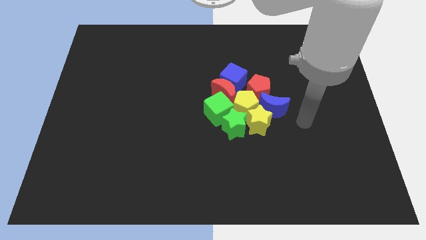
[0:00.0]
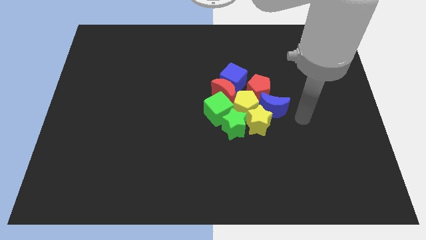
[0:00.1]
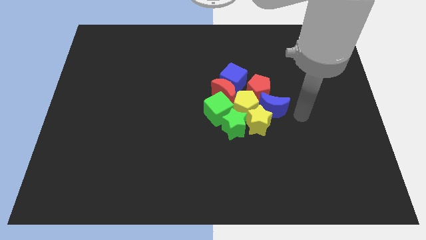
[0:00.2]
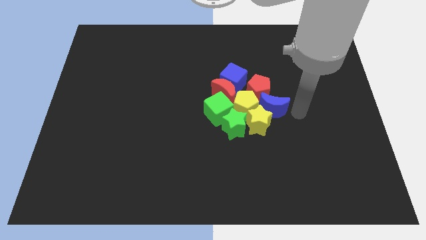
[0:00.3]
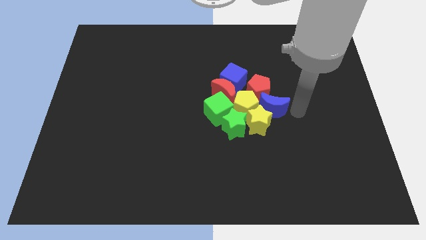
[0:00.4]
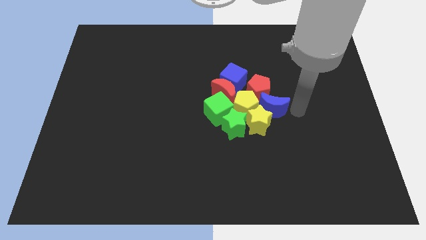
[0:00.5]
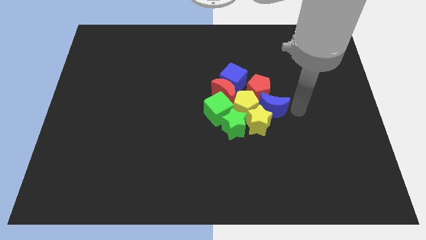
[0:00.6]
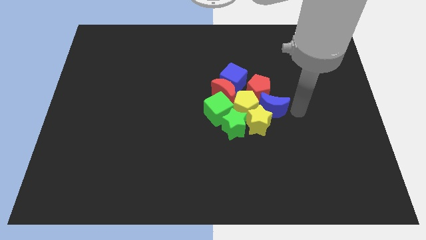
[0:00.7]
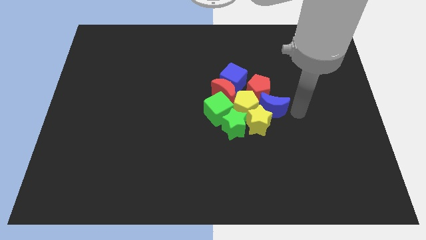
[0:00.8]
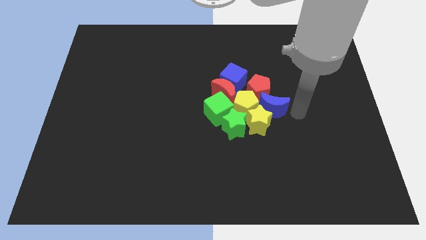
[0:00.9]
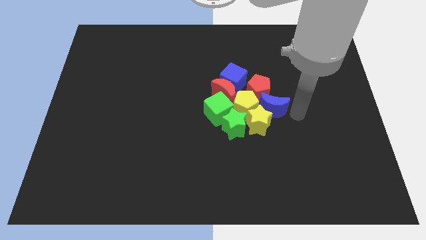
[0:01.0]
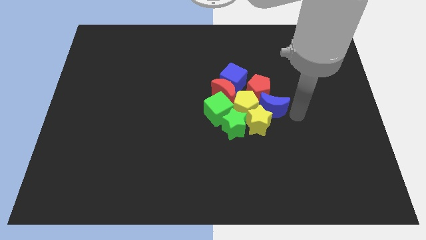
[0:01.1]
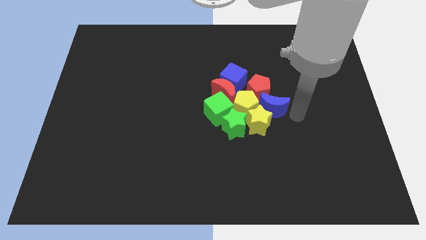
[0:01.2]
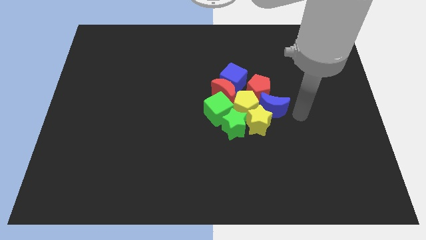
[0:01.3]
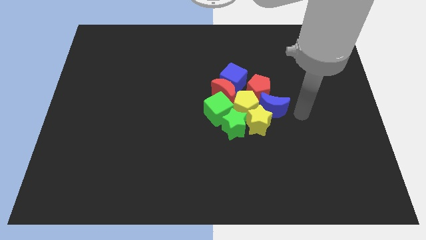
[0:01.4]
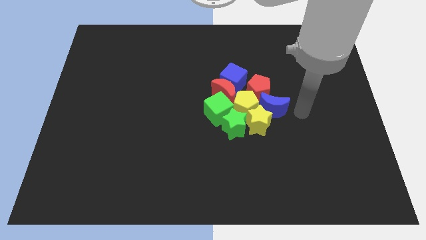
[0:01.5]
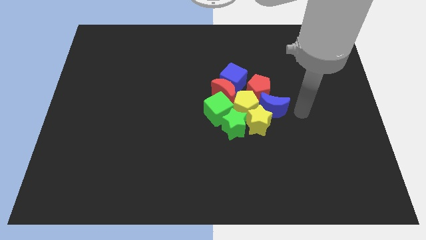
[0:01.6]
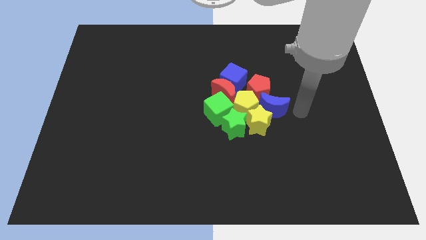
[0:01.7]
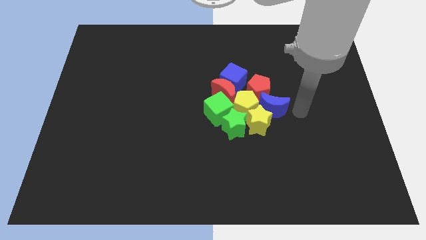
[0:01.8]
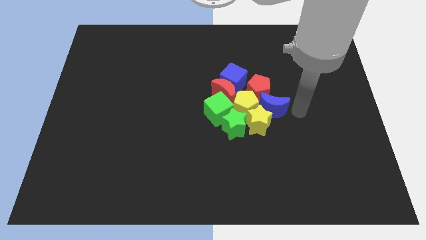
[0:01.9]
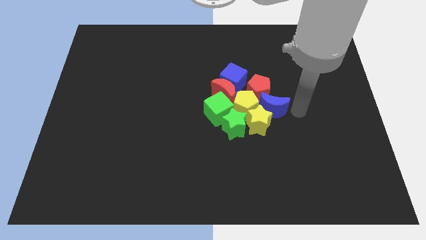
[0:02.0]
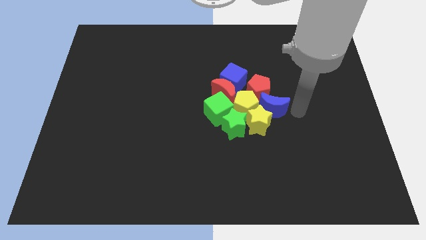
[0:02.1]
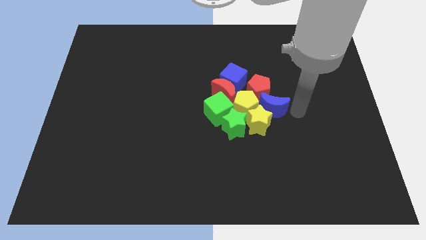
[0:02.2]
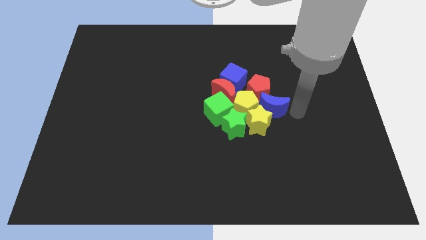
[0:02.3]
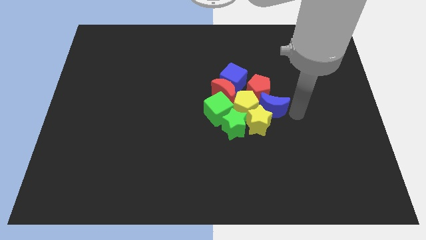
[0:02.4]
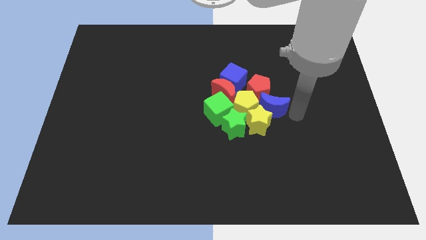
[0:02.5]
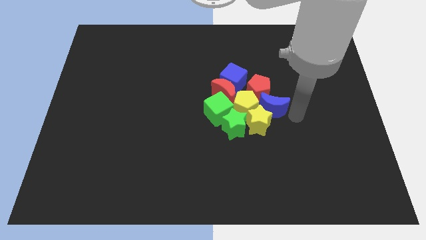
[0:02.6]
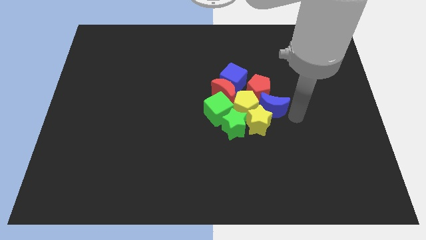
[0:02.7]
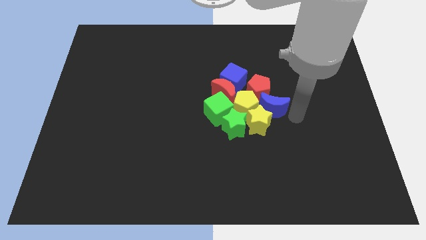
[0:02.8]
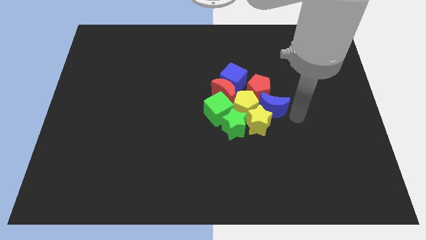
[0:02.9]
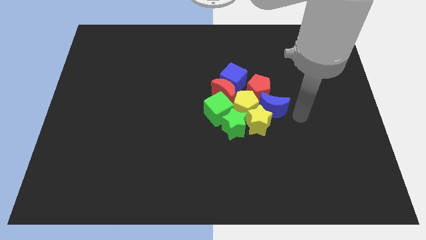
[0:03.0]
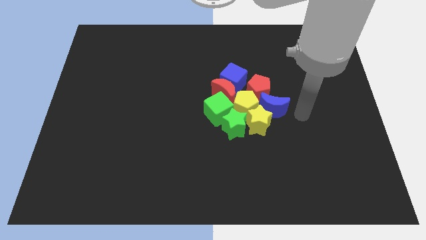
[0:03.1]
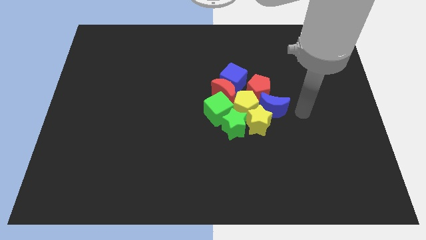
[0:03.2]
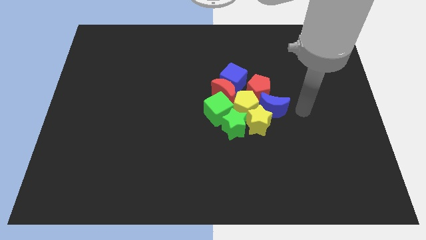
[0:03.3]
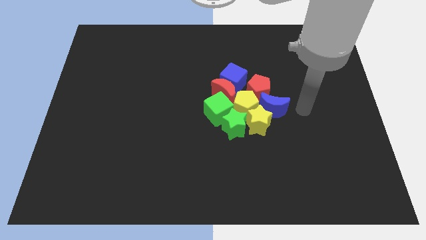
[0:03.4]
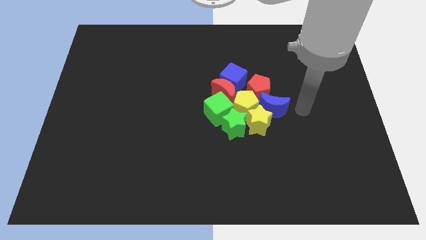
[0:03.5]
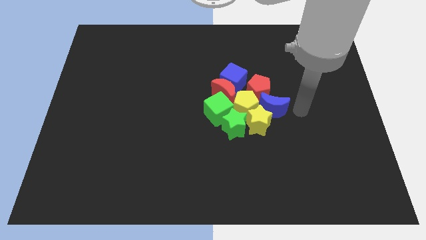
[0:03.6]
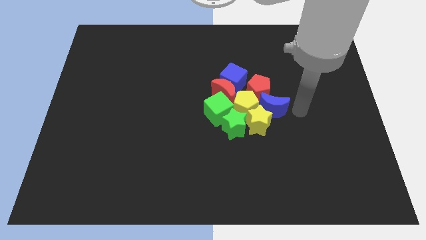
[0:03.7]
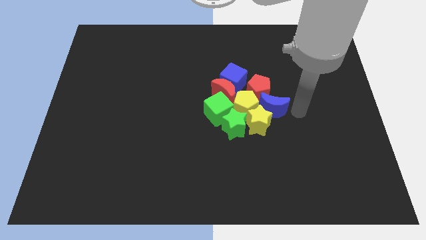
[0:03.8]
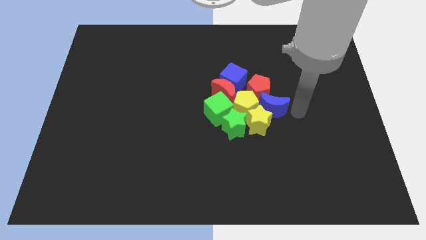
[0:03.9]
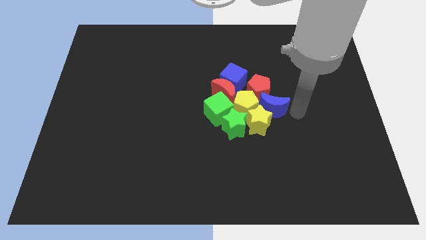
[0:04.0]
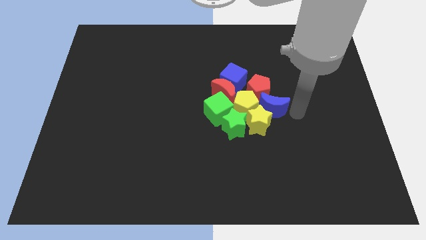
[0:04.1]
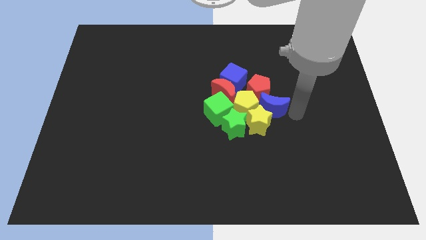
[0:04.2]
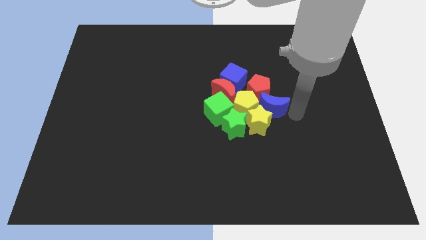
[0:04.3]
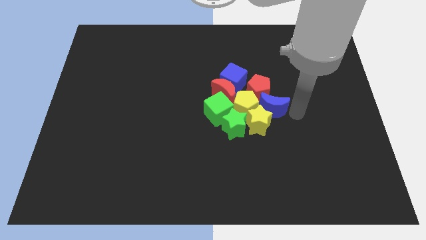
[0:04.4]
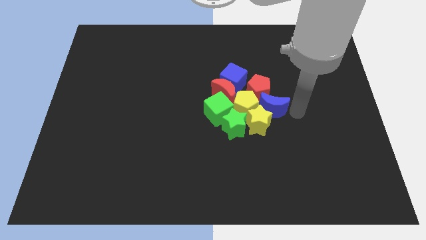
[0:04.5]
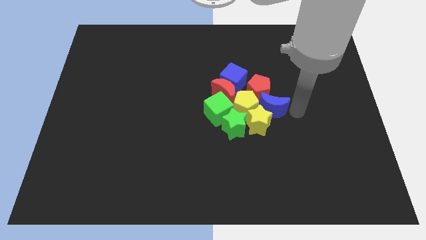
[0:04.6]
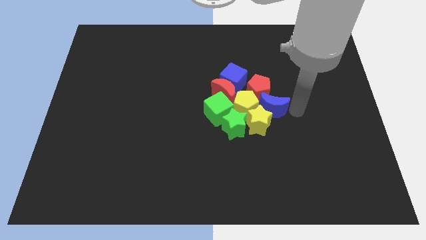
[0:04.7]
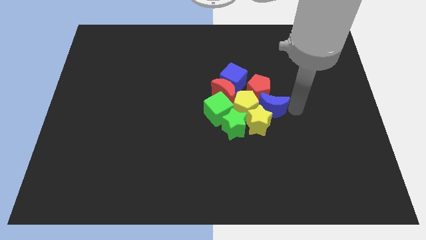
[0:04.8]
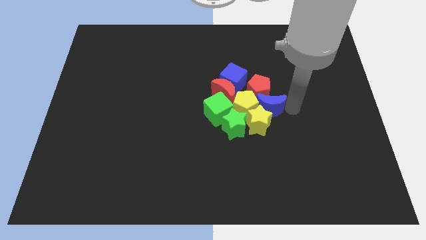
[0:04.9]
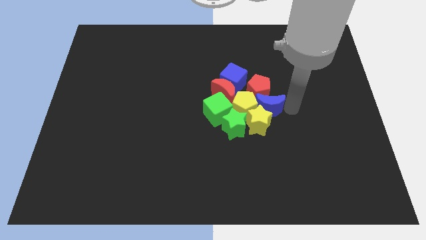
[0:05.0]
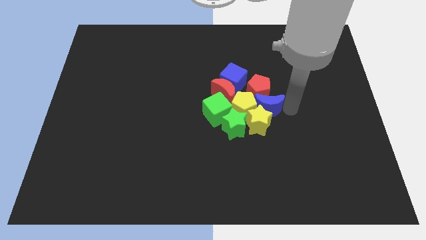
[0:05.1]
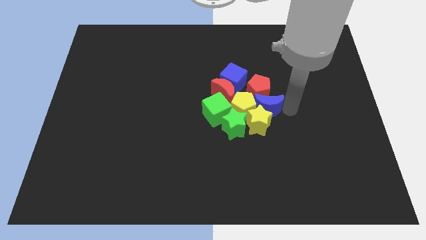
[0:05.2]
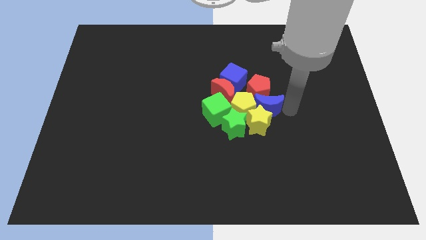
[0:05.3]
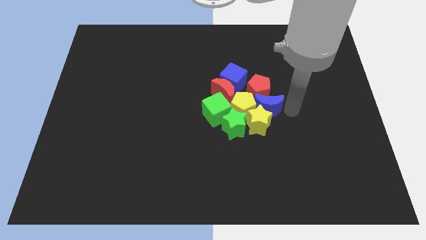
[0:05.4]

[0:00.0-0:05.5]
push the blue crescent into the yellow pentagon

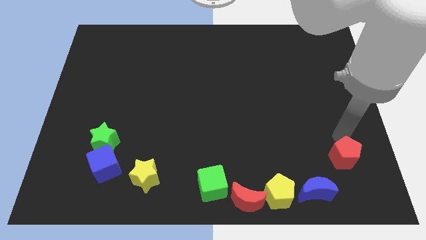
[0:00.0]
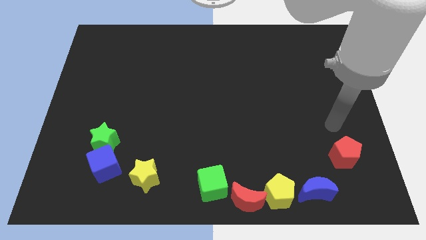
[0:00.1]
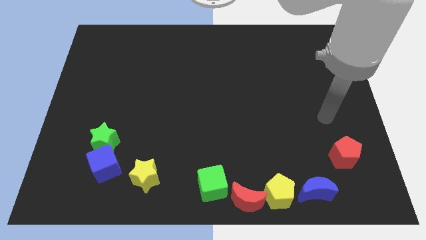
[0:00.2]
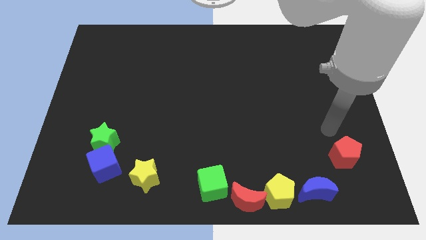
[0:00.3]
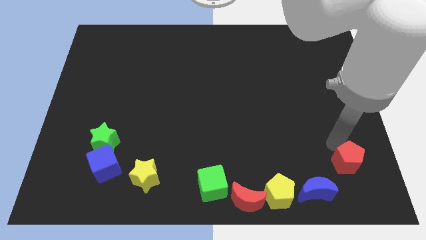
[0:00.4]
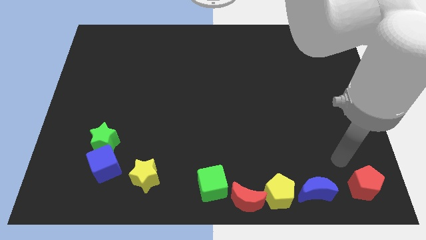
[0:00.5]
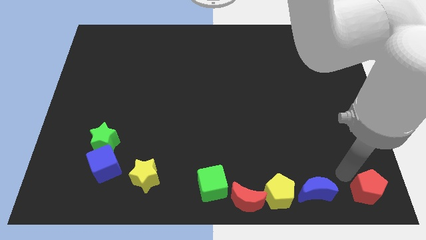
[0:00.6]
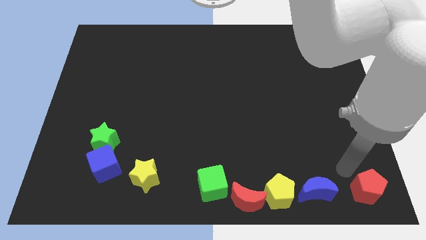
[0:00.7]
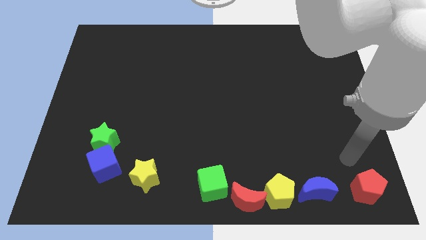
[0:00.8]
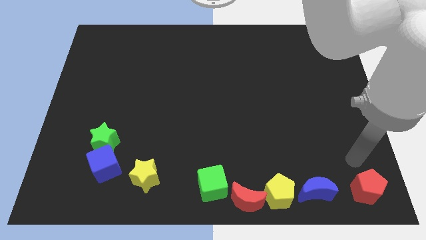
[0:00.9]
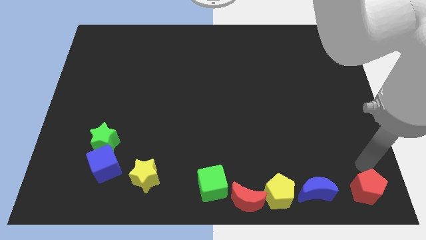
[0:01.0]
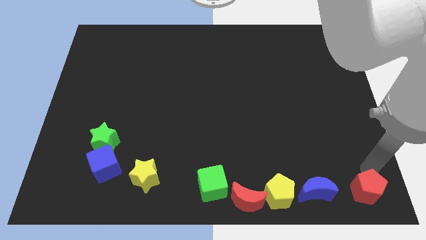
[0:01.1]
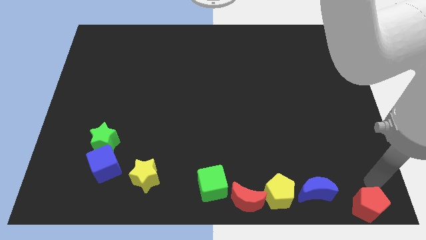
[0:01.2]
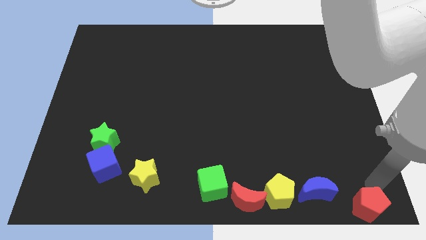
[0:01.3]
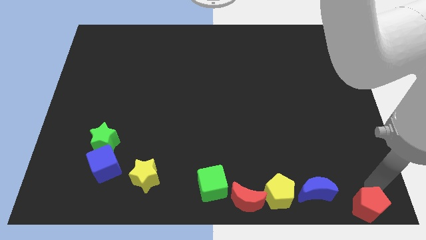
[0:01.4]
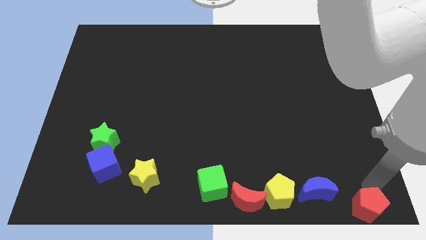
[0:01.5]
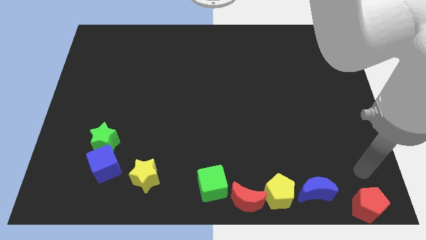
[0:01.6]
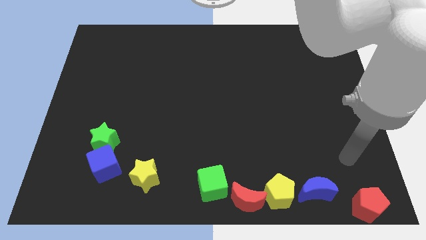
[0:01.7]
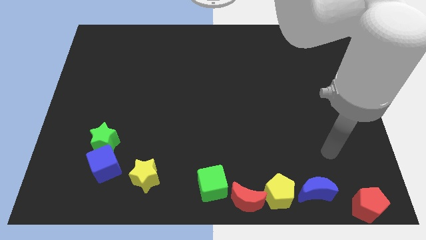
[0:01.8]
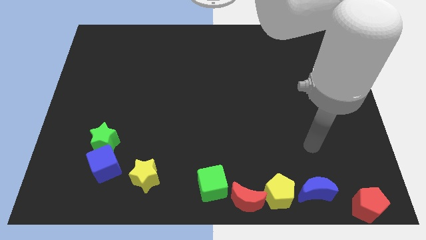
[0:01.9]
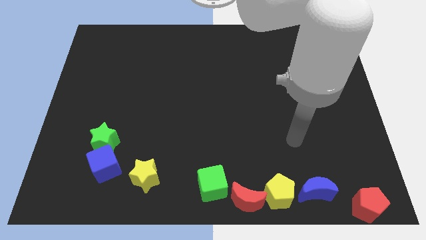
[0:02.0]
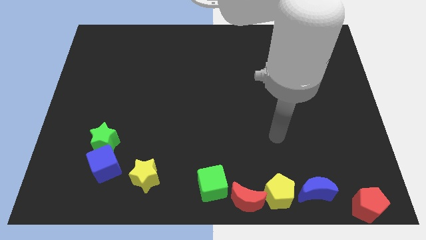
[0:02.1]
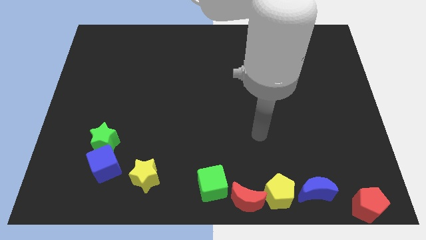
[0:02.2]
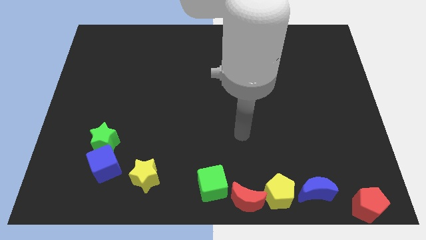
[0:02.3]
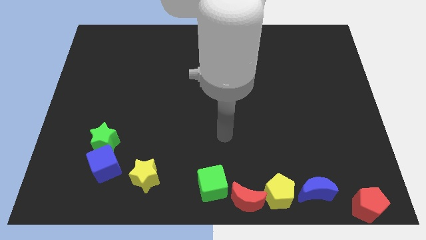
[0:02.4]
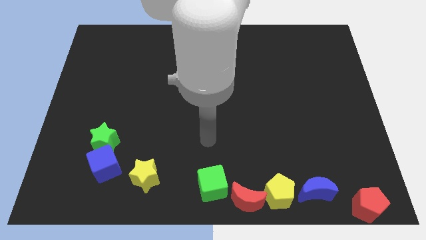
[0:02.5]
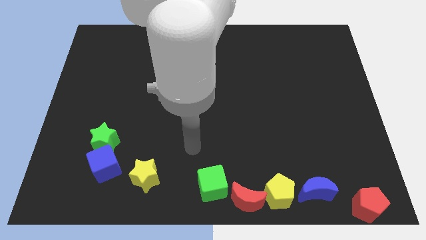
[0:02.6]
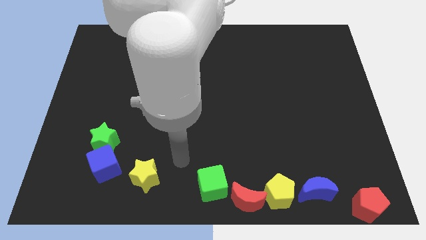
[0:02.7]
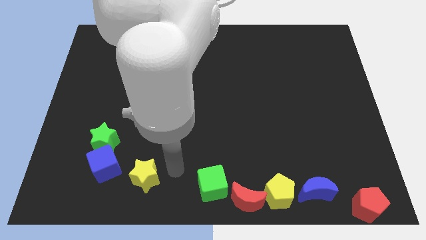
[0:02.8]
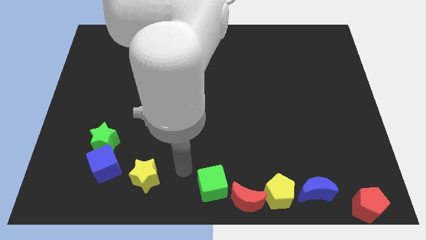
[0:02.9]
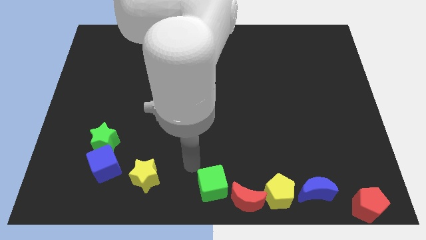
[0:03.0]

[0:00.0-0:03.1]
slide the red pentagon towards the right side of the blue moon

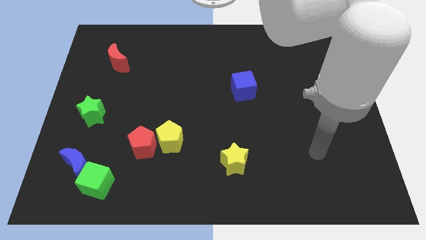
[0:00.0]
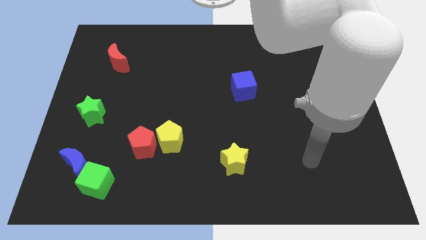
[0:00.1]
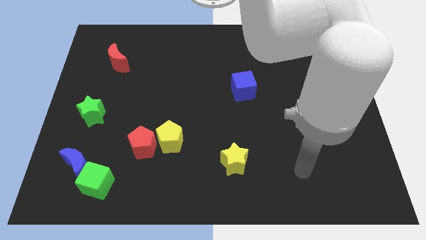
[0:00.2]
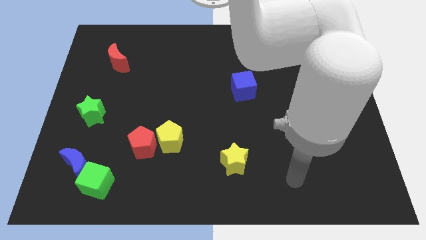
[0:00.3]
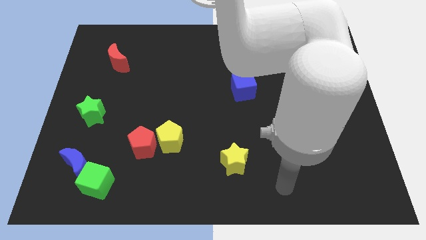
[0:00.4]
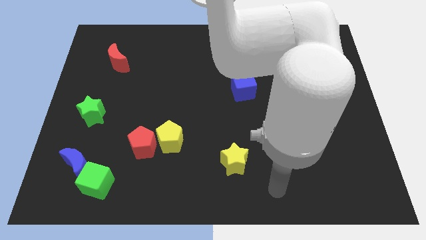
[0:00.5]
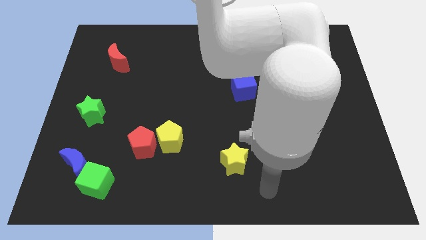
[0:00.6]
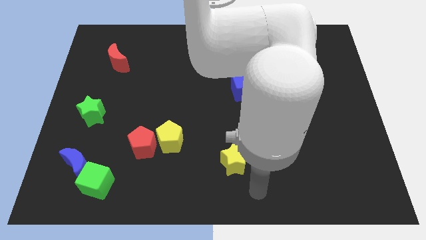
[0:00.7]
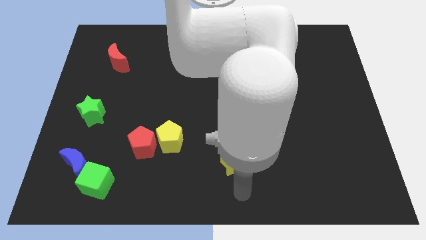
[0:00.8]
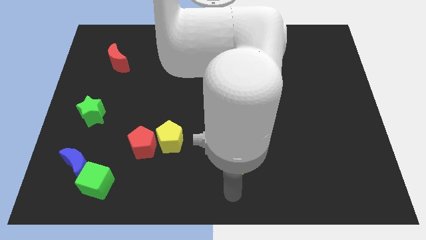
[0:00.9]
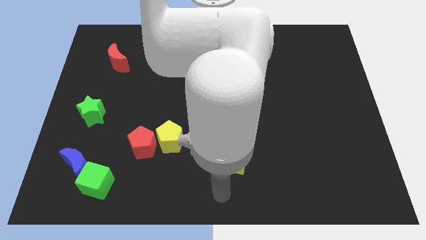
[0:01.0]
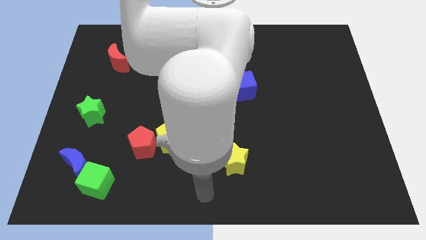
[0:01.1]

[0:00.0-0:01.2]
move your arm to the bottom of the yellow star
